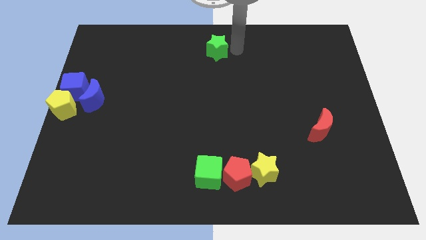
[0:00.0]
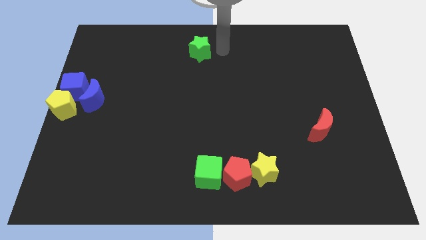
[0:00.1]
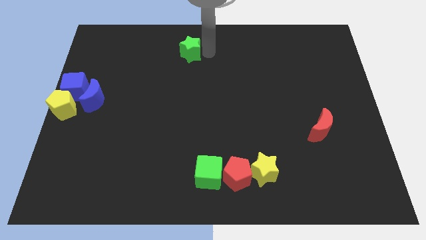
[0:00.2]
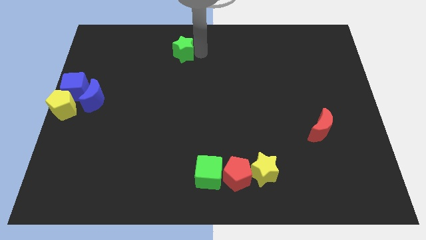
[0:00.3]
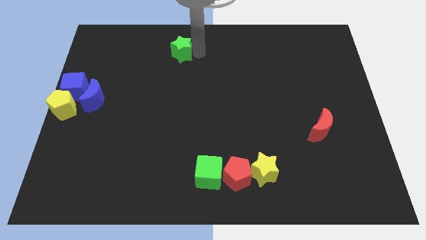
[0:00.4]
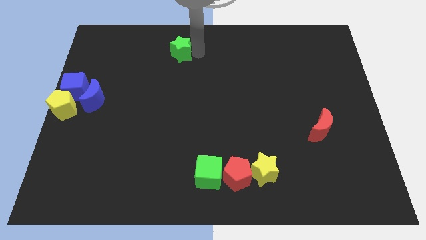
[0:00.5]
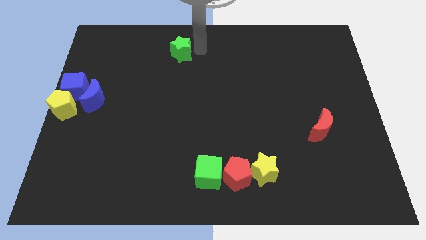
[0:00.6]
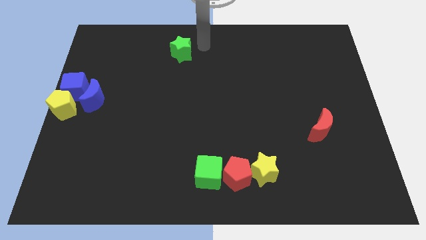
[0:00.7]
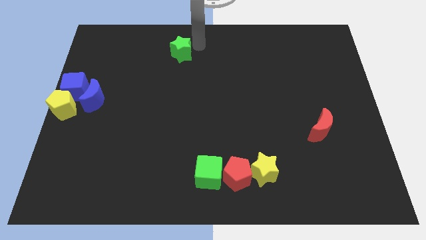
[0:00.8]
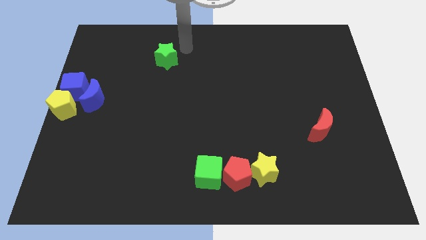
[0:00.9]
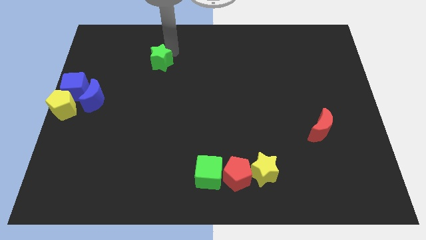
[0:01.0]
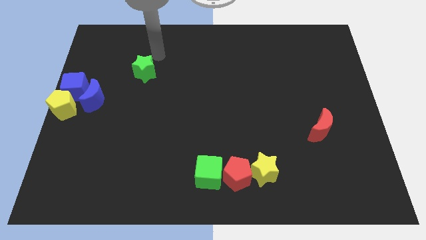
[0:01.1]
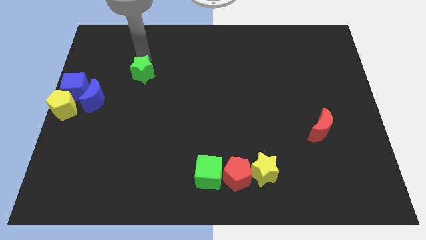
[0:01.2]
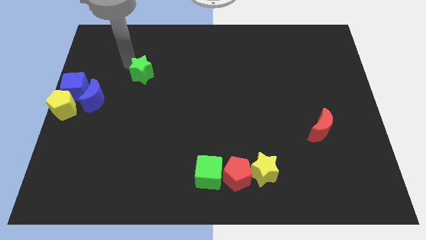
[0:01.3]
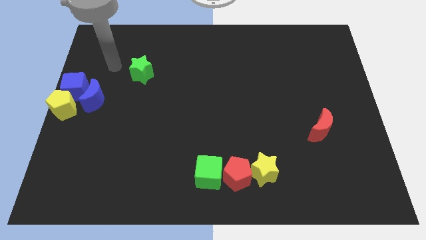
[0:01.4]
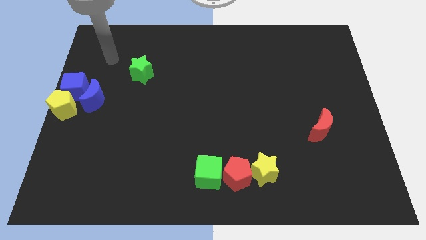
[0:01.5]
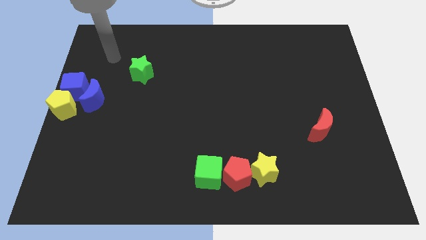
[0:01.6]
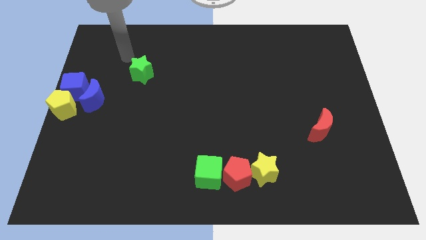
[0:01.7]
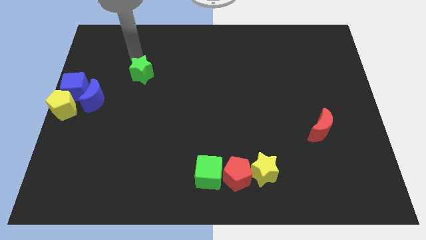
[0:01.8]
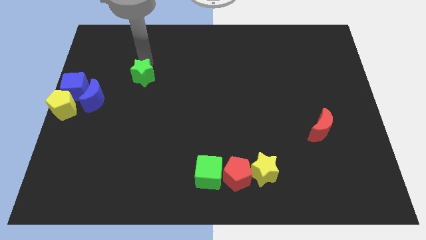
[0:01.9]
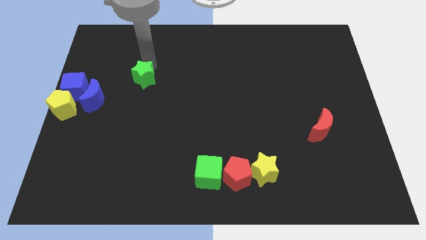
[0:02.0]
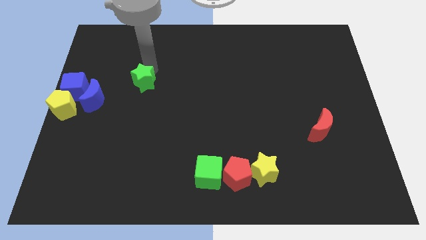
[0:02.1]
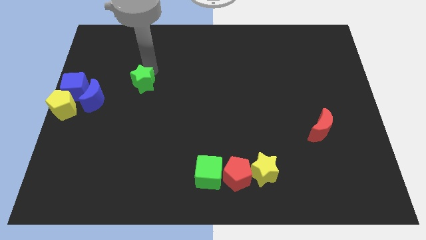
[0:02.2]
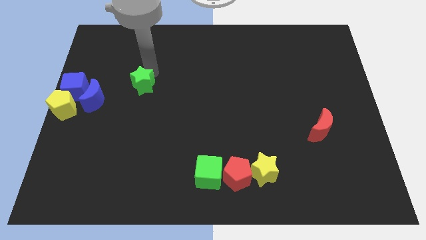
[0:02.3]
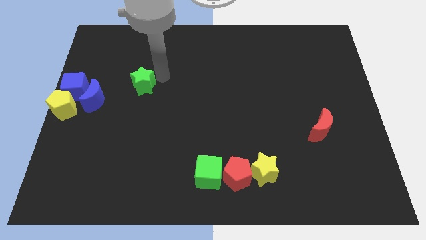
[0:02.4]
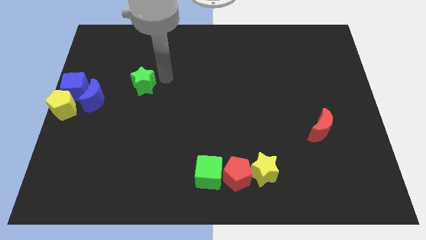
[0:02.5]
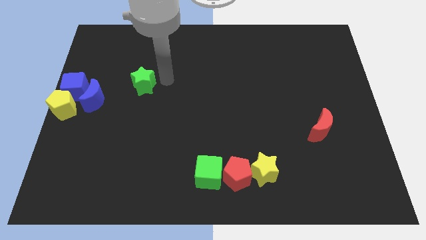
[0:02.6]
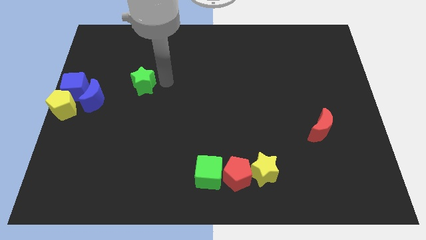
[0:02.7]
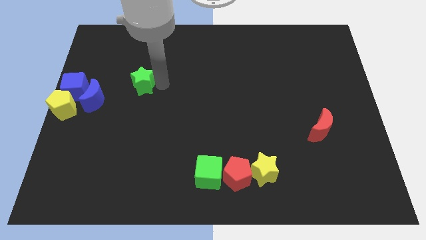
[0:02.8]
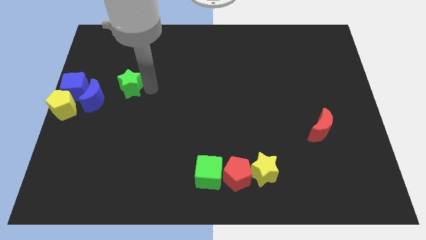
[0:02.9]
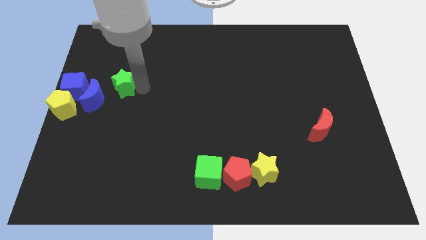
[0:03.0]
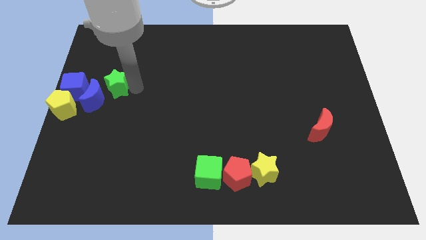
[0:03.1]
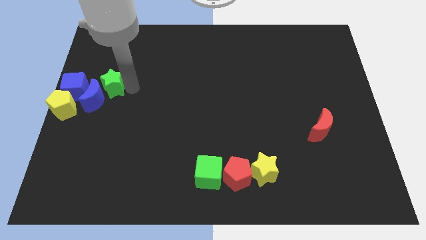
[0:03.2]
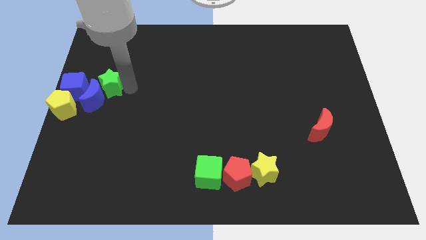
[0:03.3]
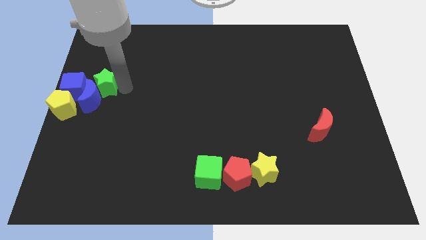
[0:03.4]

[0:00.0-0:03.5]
place green star to the top right of blue moon

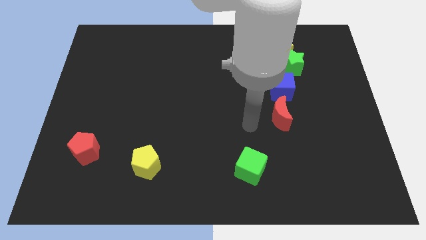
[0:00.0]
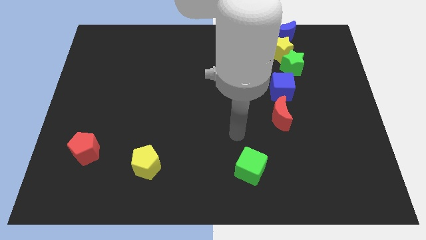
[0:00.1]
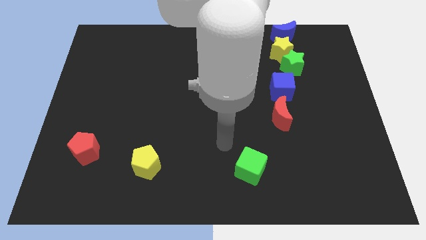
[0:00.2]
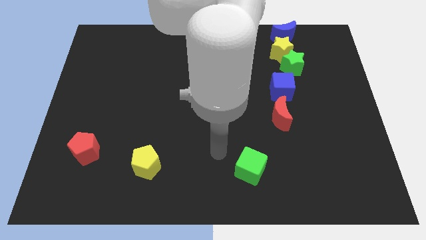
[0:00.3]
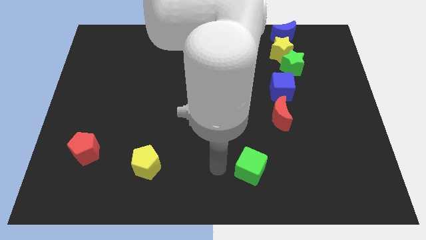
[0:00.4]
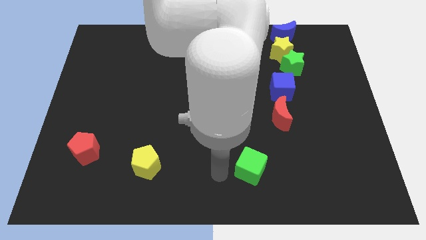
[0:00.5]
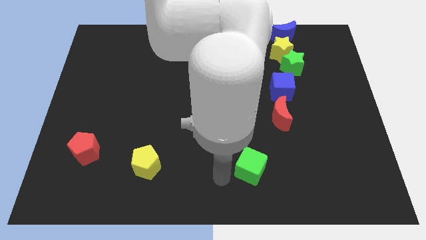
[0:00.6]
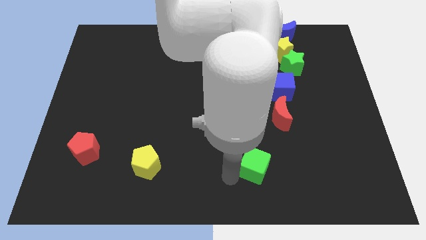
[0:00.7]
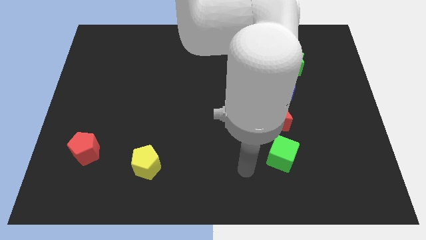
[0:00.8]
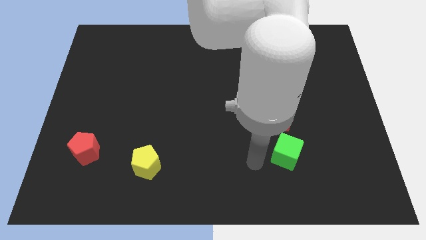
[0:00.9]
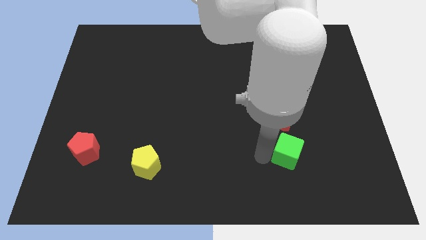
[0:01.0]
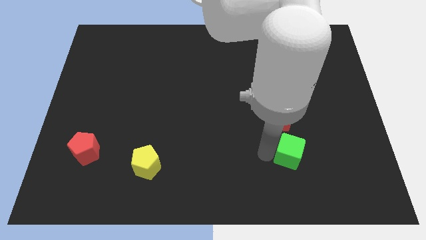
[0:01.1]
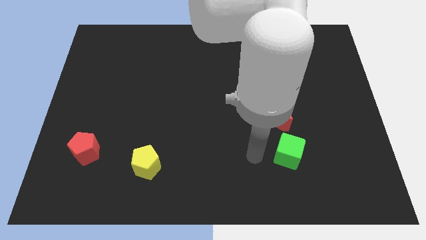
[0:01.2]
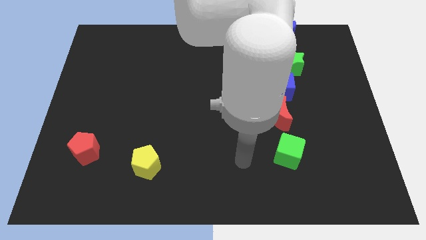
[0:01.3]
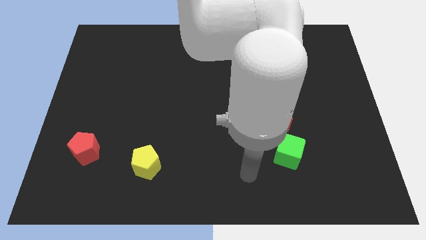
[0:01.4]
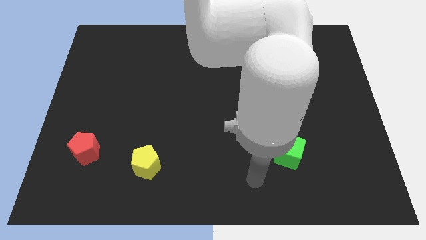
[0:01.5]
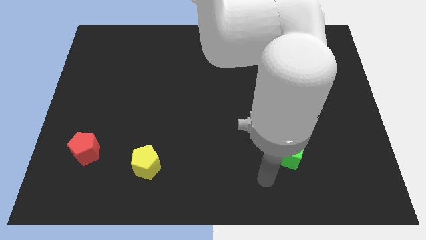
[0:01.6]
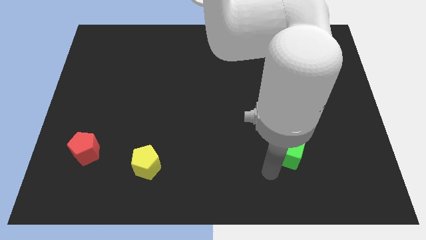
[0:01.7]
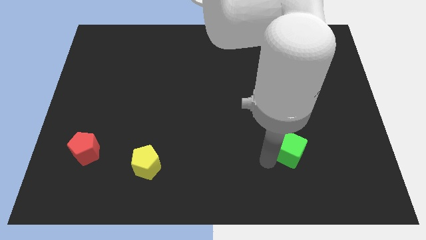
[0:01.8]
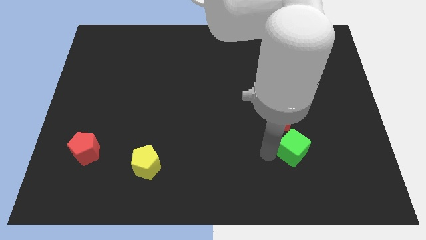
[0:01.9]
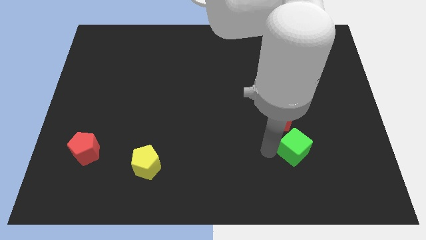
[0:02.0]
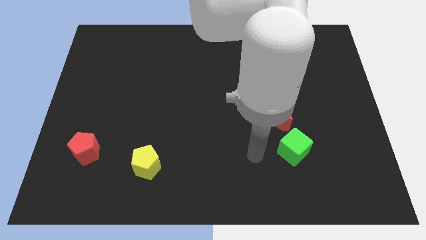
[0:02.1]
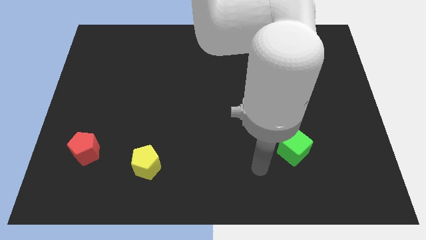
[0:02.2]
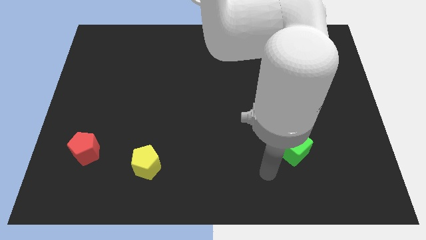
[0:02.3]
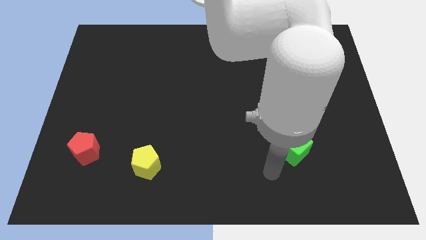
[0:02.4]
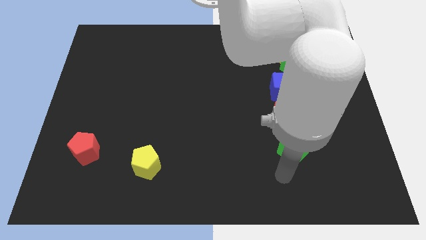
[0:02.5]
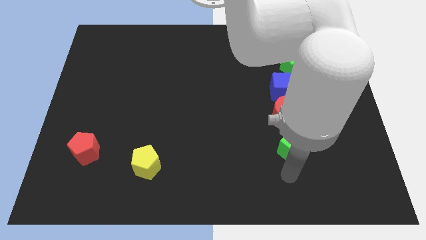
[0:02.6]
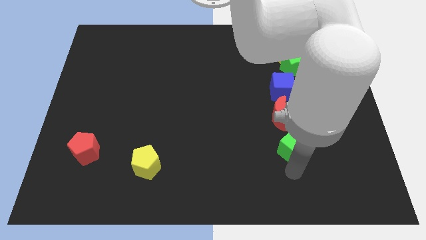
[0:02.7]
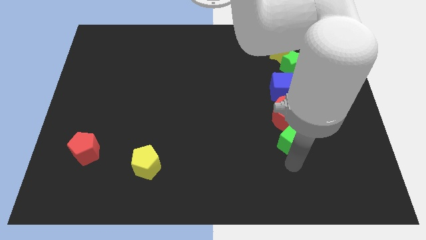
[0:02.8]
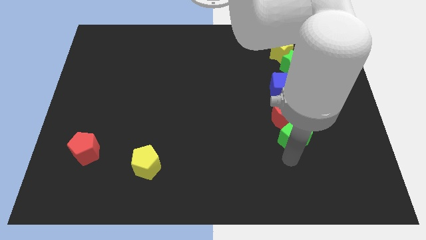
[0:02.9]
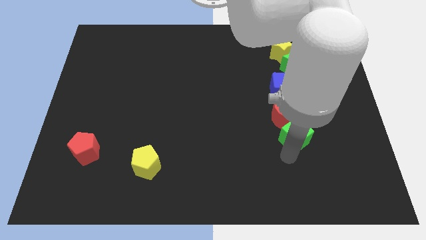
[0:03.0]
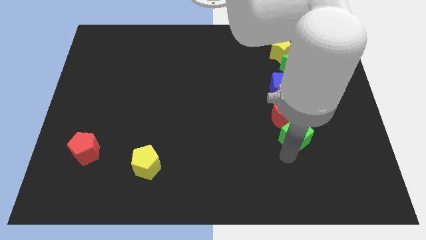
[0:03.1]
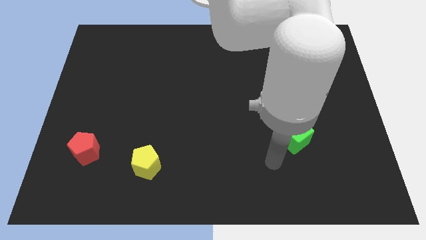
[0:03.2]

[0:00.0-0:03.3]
move green cube below the red moon

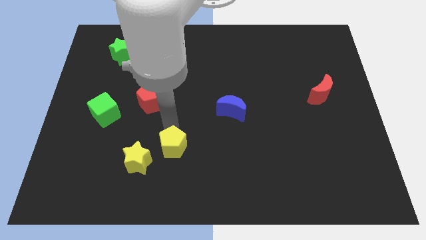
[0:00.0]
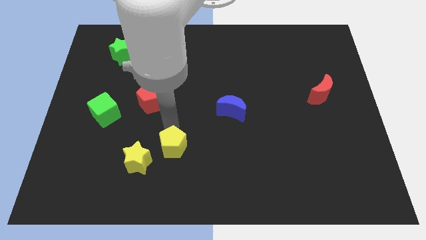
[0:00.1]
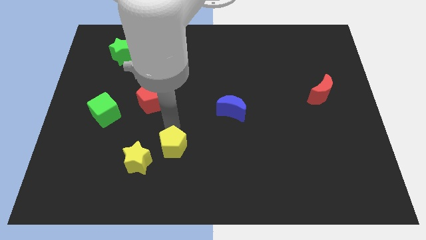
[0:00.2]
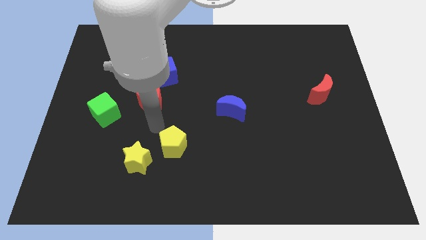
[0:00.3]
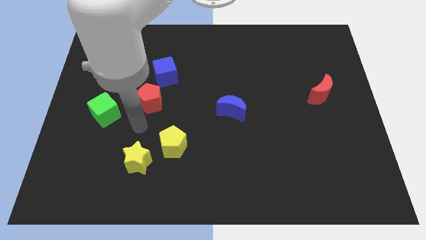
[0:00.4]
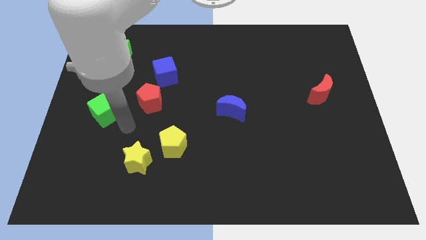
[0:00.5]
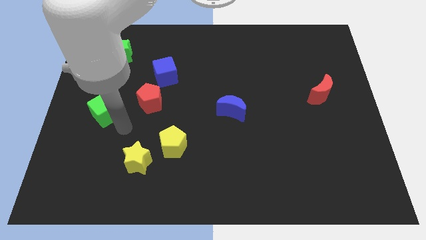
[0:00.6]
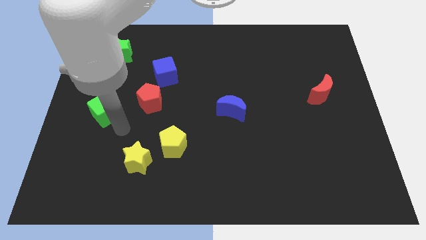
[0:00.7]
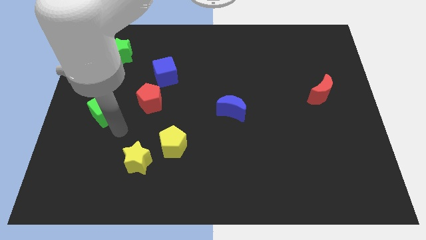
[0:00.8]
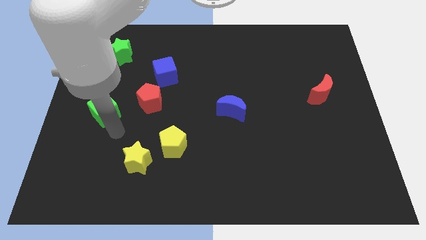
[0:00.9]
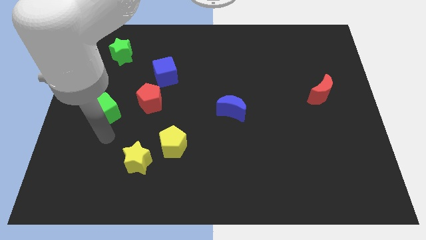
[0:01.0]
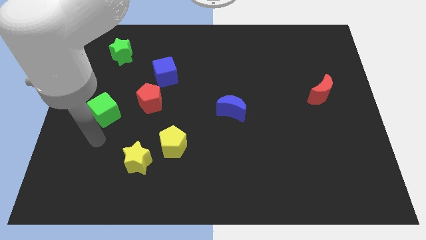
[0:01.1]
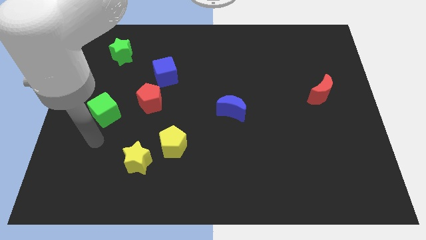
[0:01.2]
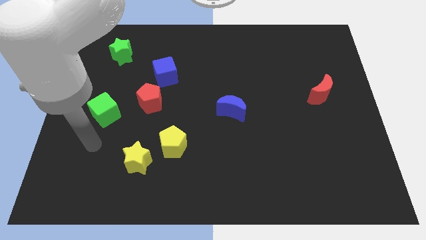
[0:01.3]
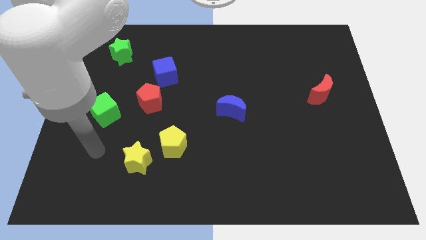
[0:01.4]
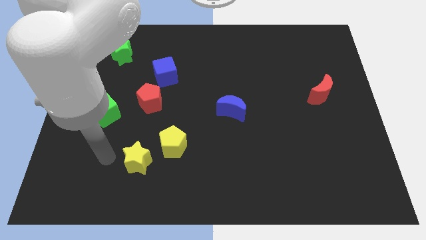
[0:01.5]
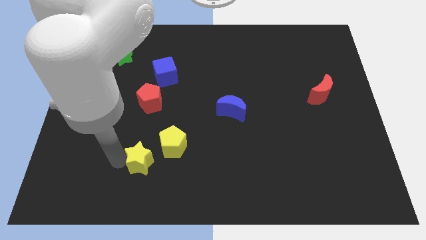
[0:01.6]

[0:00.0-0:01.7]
place your arm to the left of the yellow star

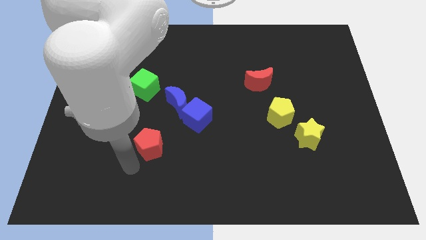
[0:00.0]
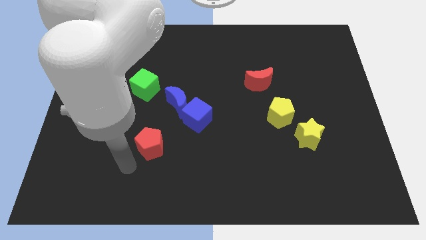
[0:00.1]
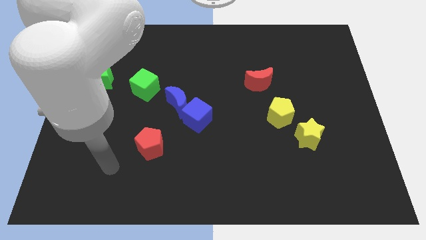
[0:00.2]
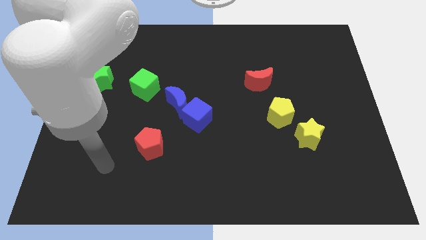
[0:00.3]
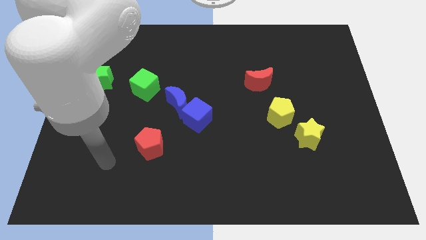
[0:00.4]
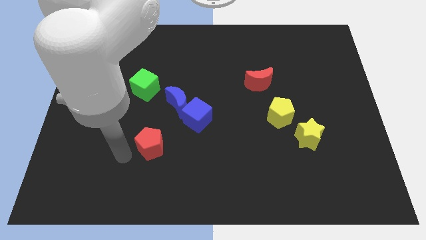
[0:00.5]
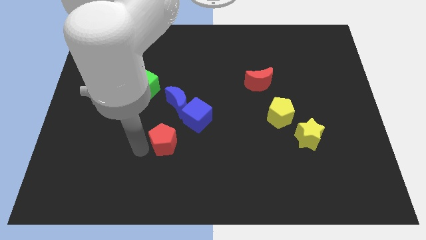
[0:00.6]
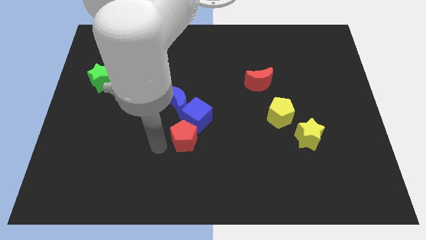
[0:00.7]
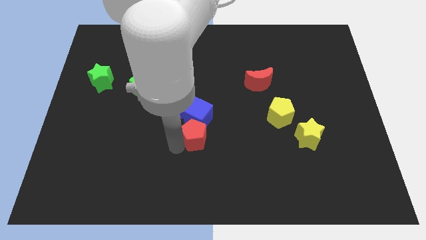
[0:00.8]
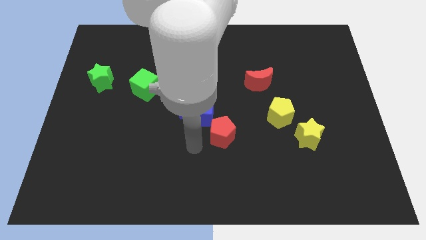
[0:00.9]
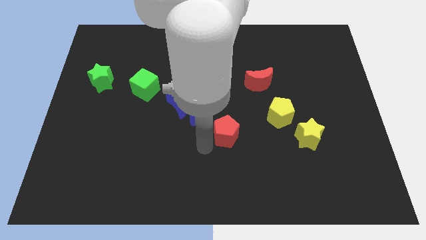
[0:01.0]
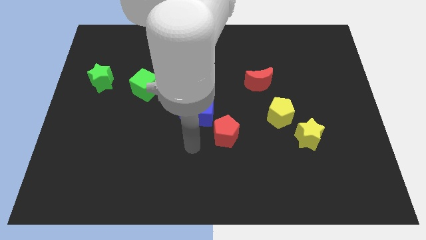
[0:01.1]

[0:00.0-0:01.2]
place the red pentagon diagonally to the blue cube
